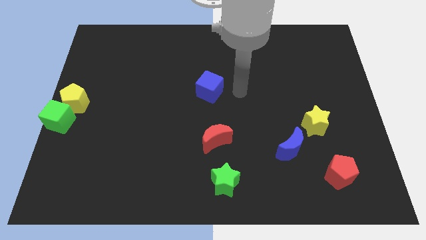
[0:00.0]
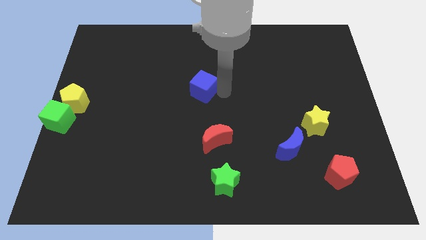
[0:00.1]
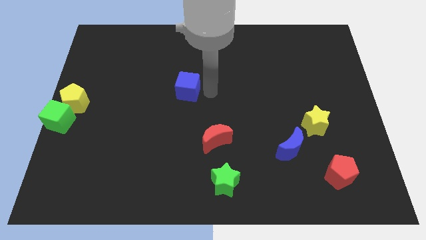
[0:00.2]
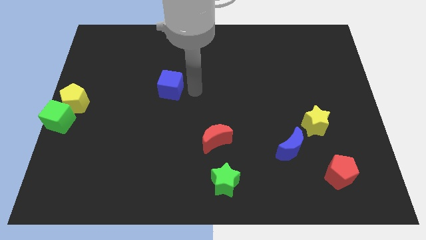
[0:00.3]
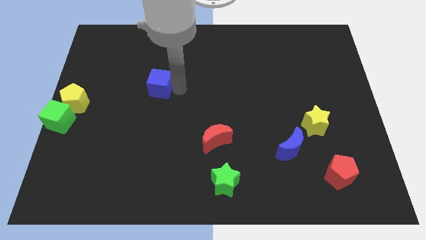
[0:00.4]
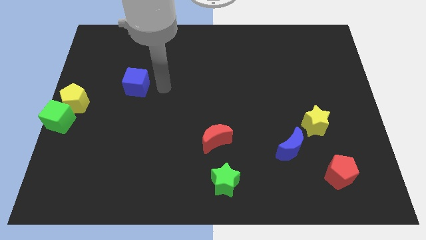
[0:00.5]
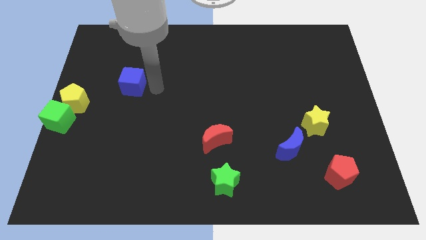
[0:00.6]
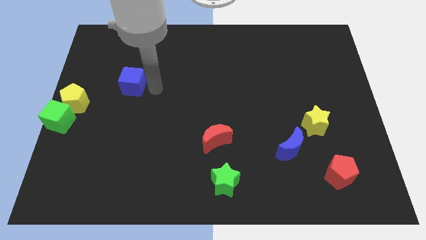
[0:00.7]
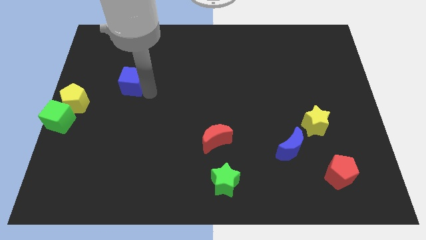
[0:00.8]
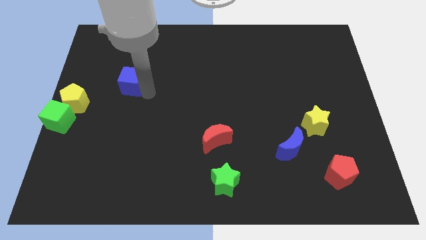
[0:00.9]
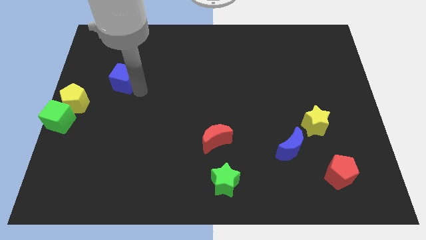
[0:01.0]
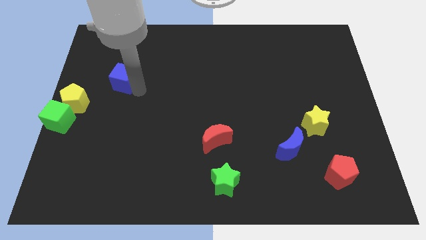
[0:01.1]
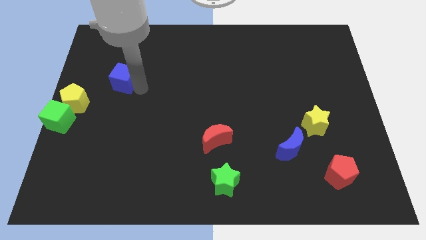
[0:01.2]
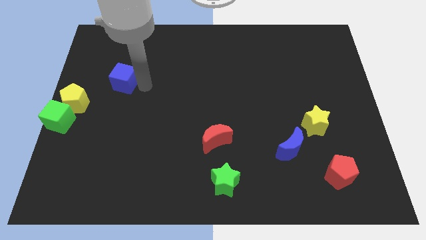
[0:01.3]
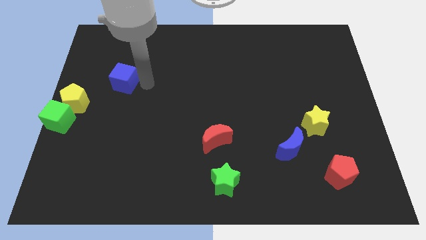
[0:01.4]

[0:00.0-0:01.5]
move the blue cube from center to left side of the board

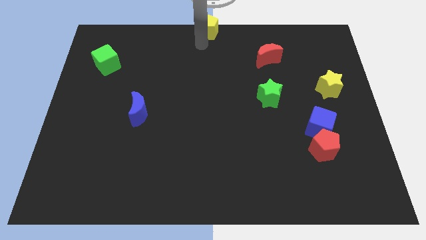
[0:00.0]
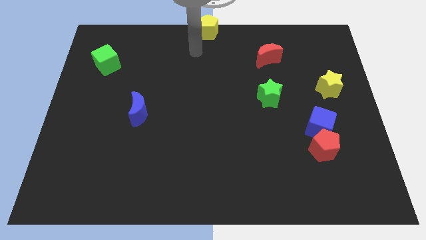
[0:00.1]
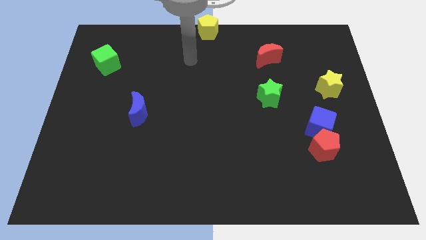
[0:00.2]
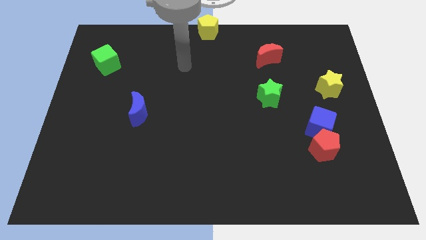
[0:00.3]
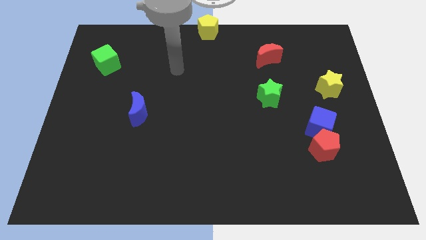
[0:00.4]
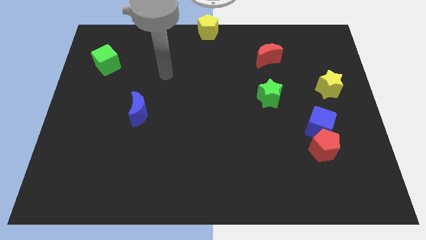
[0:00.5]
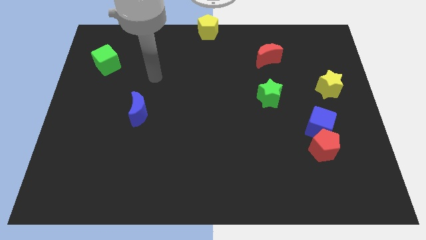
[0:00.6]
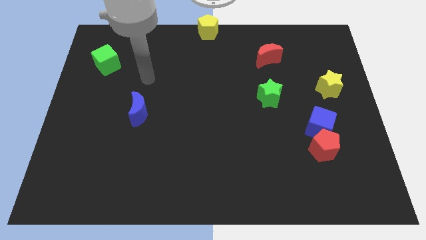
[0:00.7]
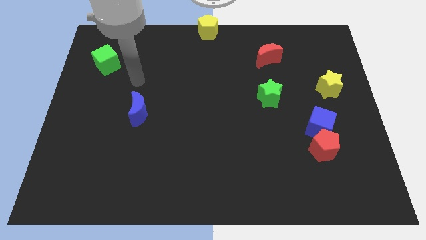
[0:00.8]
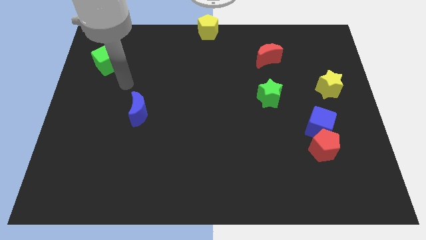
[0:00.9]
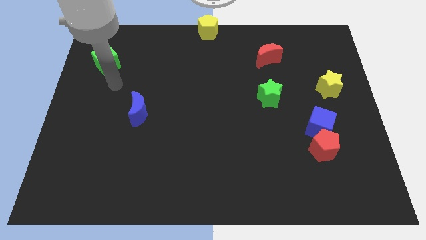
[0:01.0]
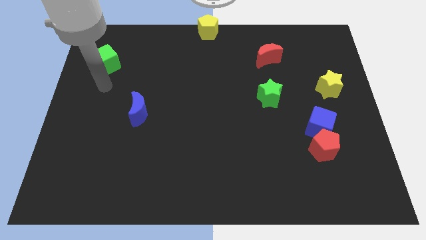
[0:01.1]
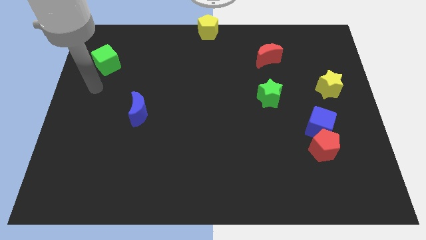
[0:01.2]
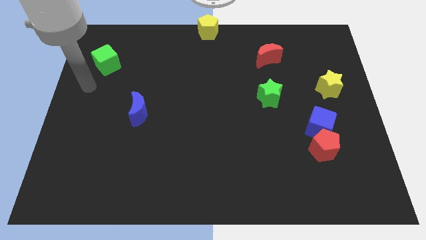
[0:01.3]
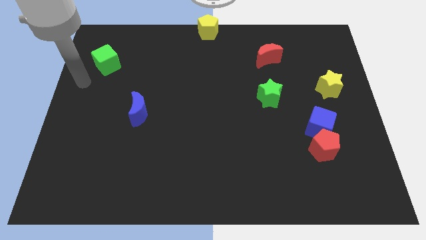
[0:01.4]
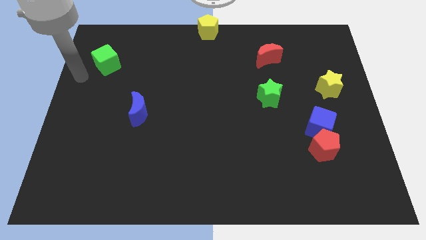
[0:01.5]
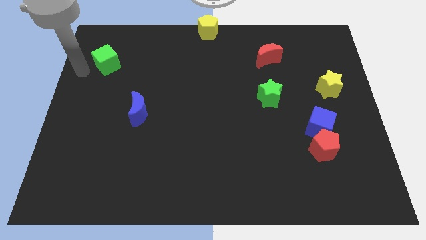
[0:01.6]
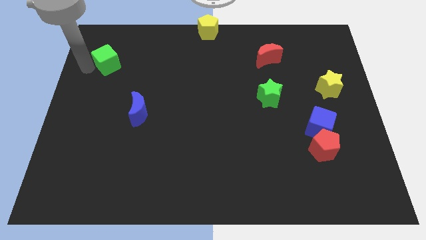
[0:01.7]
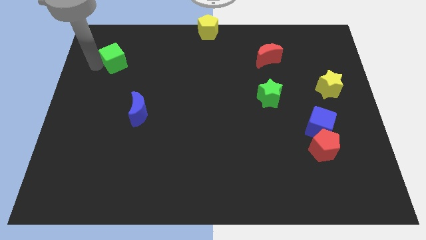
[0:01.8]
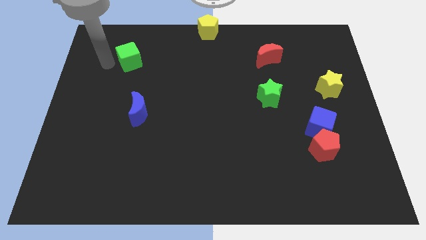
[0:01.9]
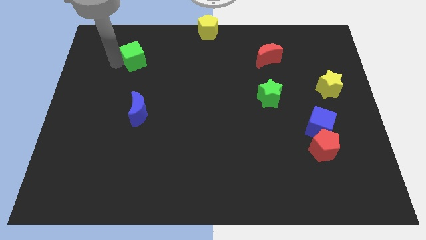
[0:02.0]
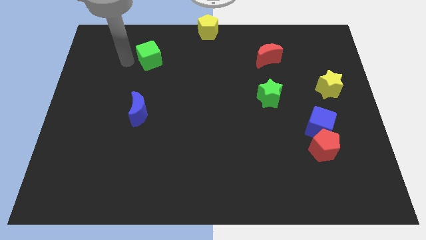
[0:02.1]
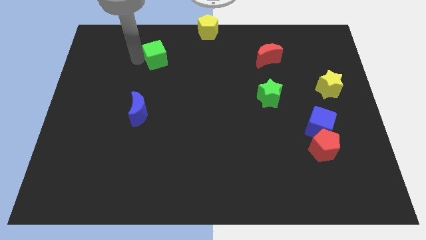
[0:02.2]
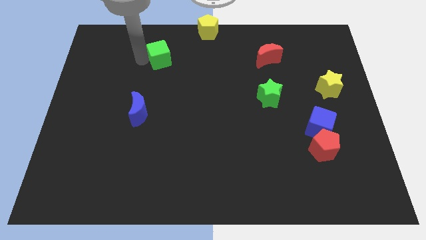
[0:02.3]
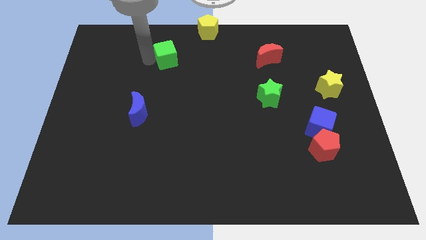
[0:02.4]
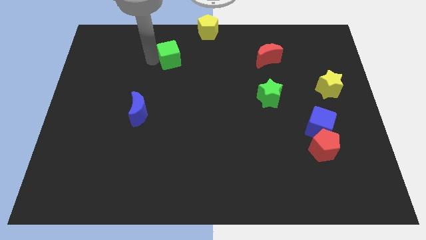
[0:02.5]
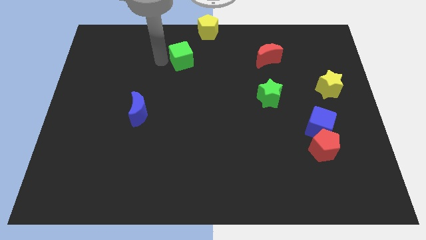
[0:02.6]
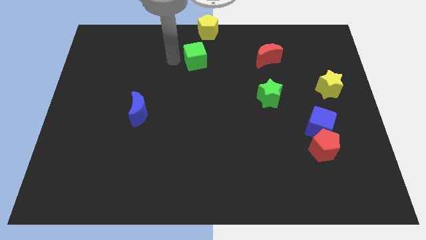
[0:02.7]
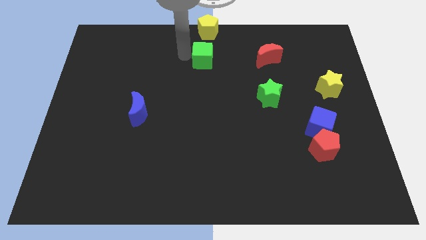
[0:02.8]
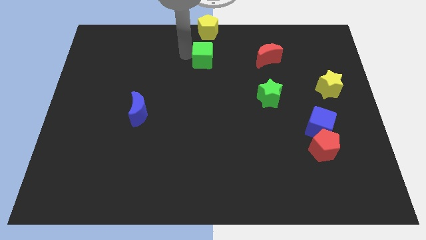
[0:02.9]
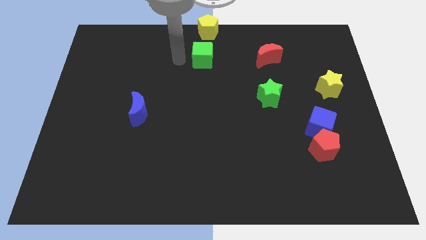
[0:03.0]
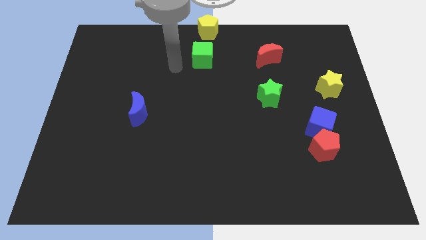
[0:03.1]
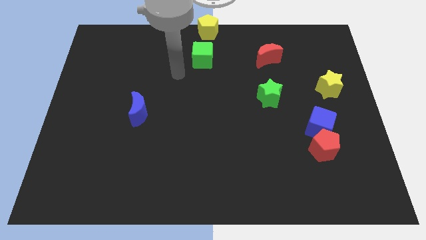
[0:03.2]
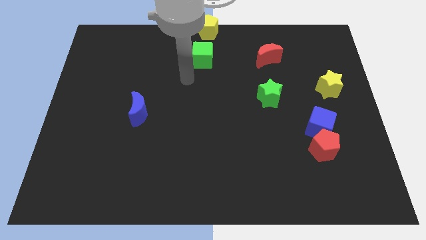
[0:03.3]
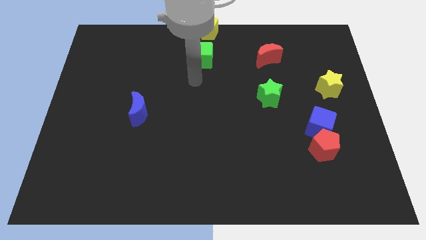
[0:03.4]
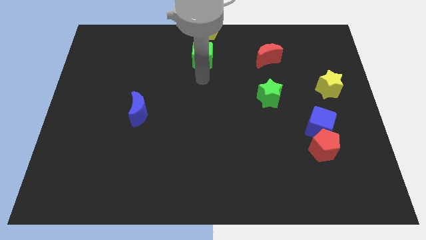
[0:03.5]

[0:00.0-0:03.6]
put the green cube at the bottom of yellow star

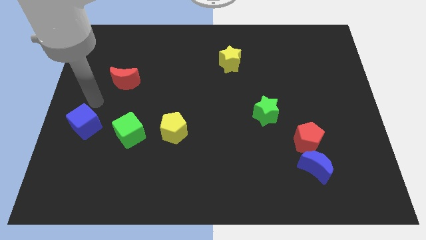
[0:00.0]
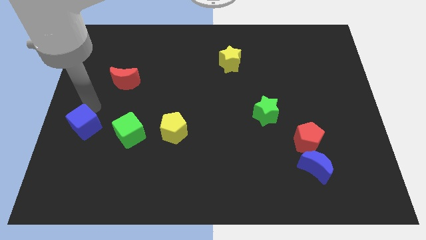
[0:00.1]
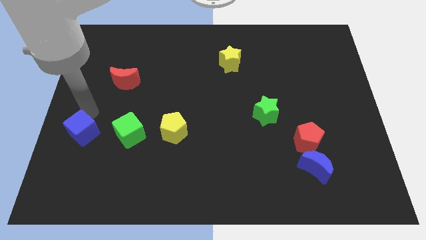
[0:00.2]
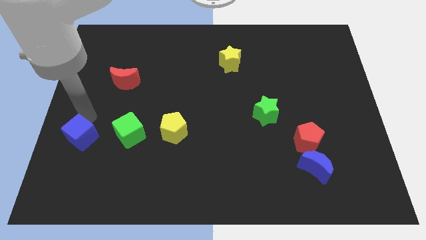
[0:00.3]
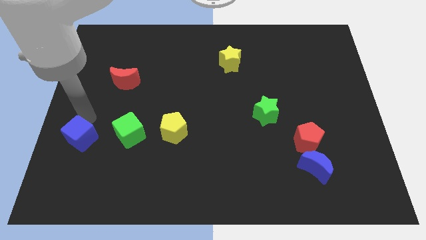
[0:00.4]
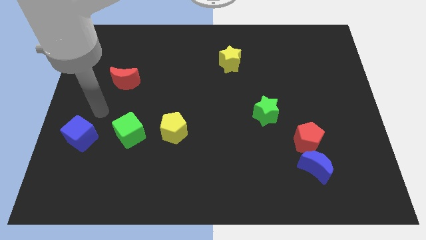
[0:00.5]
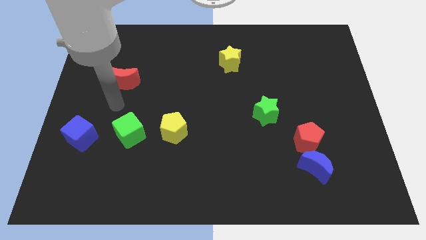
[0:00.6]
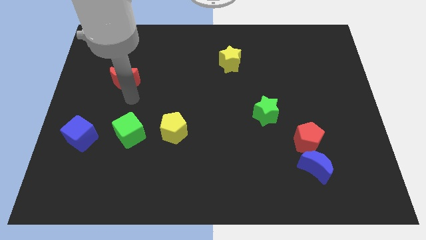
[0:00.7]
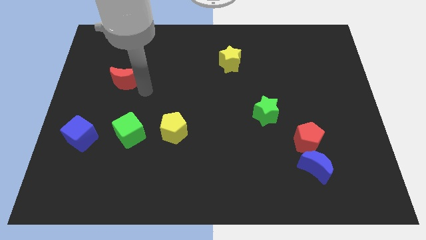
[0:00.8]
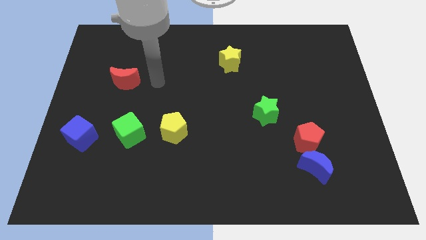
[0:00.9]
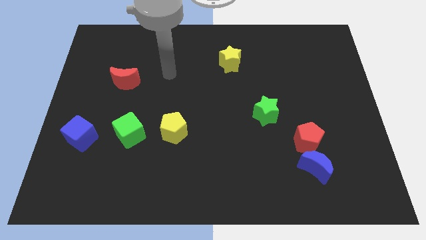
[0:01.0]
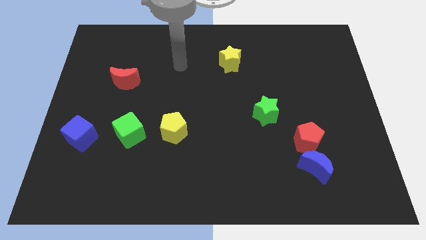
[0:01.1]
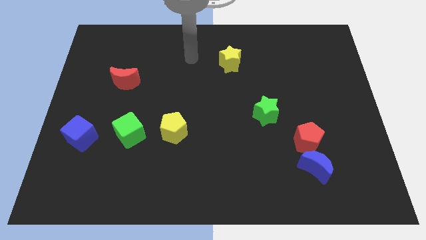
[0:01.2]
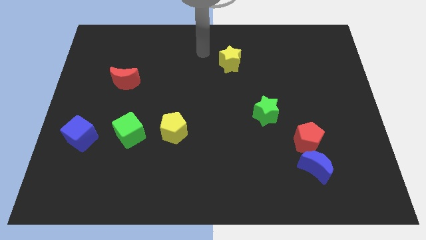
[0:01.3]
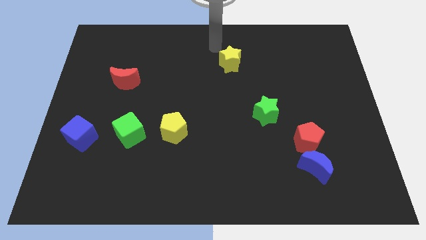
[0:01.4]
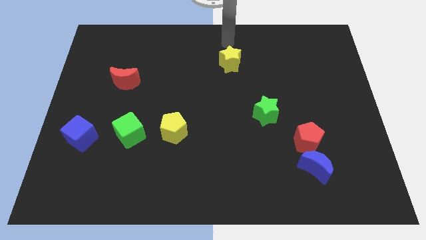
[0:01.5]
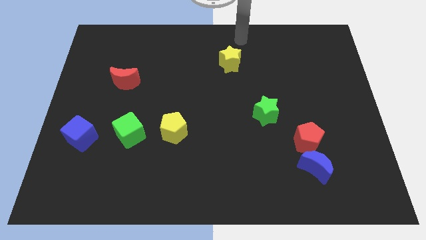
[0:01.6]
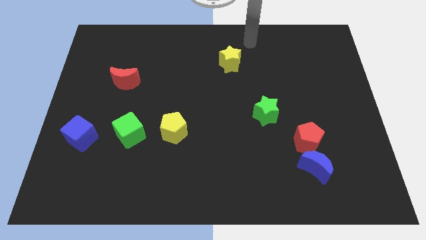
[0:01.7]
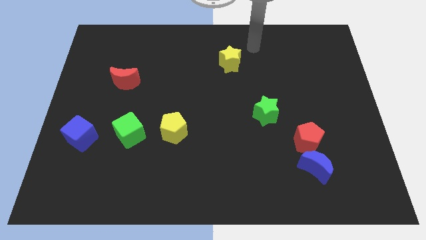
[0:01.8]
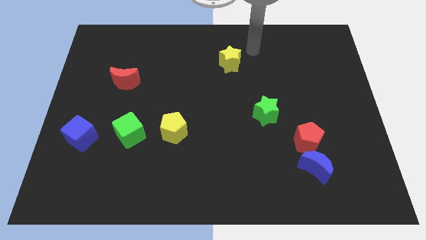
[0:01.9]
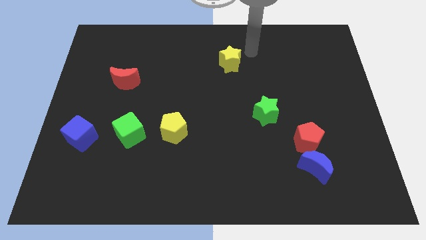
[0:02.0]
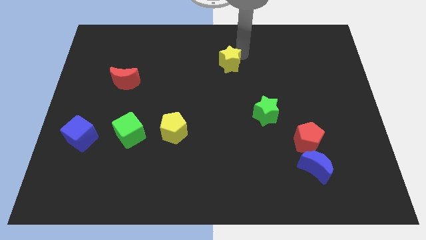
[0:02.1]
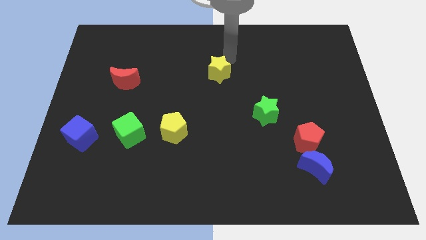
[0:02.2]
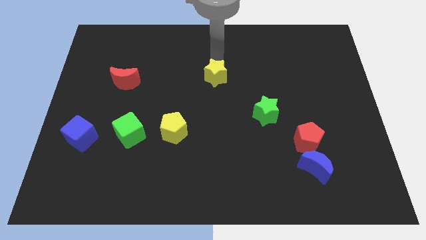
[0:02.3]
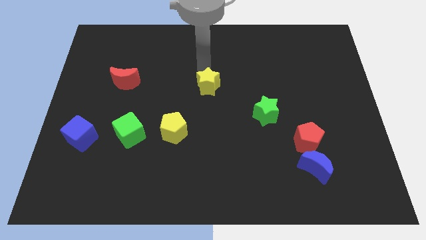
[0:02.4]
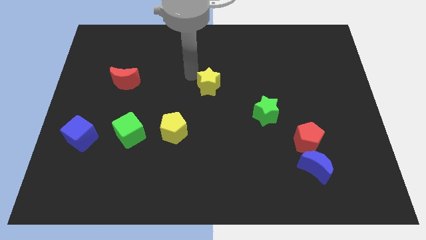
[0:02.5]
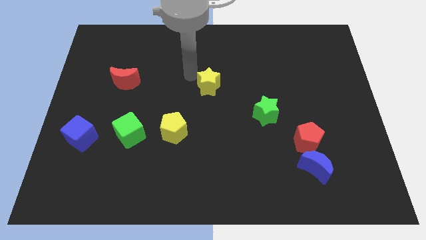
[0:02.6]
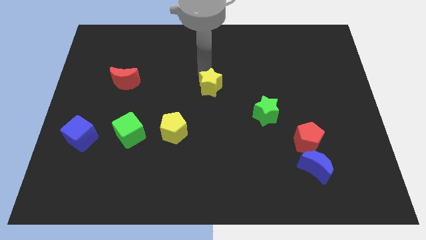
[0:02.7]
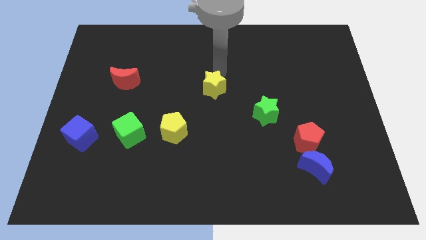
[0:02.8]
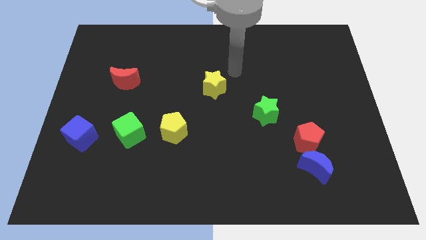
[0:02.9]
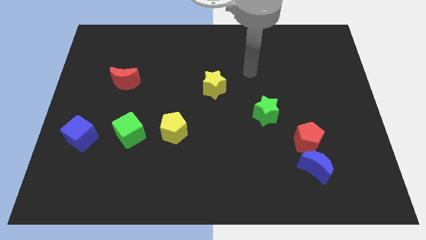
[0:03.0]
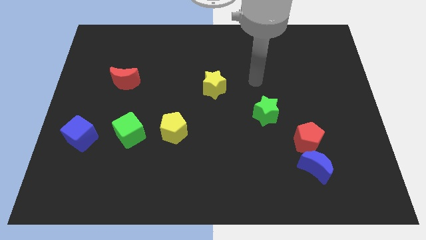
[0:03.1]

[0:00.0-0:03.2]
slide the yellow star towards the center

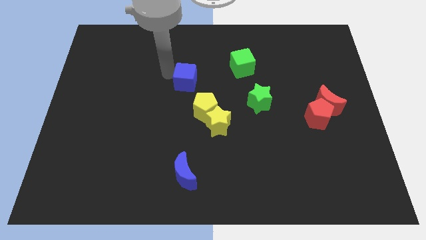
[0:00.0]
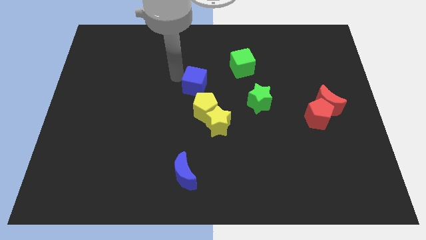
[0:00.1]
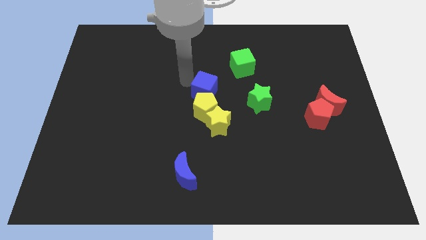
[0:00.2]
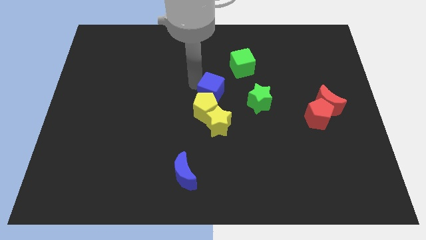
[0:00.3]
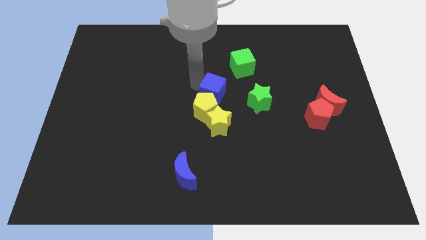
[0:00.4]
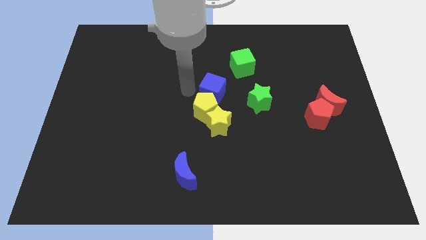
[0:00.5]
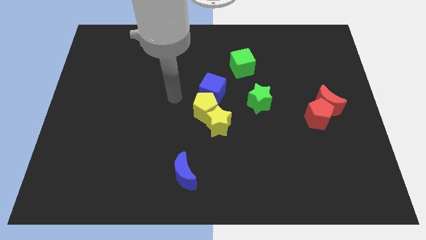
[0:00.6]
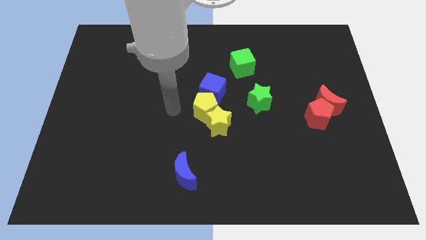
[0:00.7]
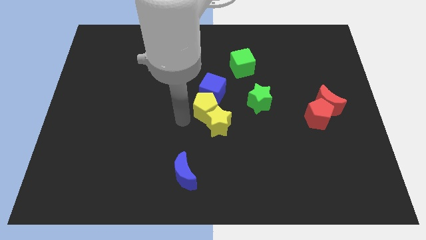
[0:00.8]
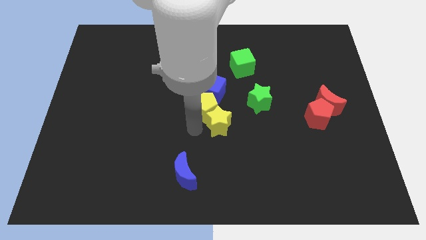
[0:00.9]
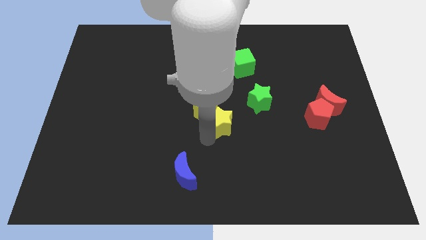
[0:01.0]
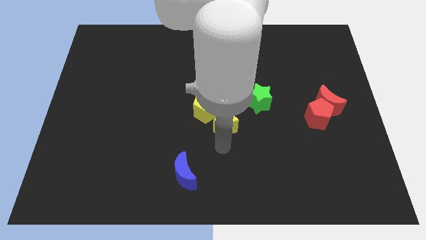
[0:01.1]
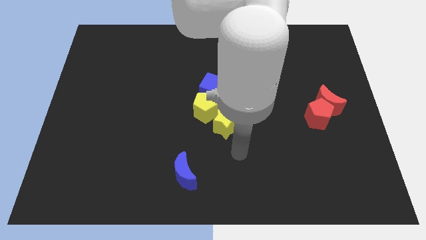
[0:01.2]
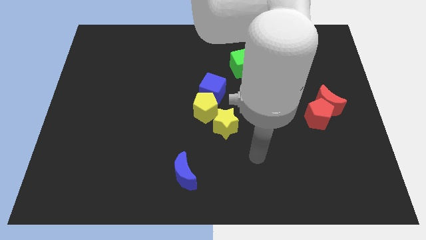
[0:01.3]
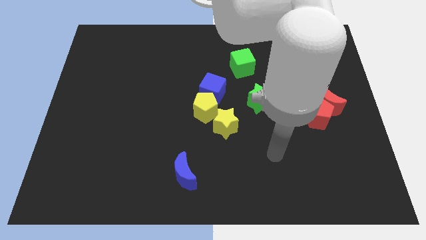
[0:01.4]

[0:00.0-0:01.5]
move your arm away form blue cube
